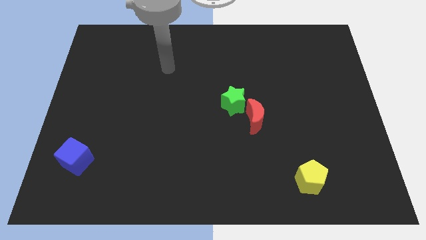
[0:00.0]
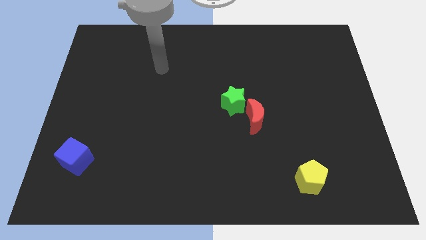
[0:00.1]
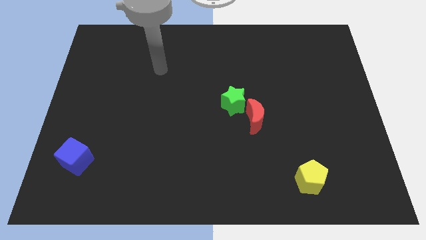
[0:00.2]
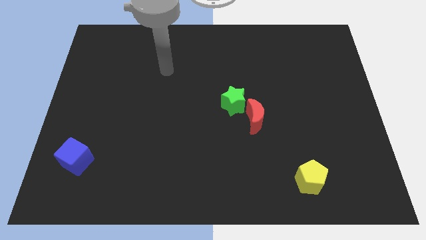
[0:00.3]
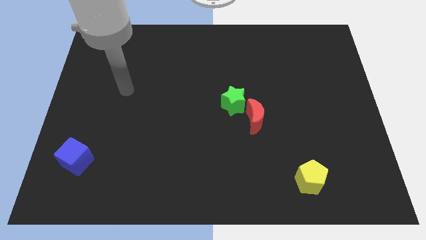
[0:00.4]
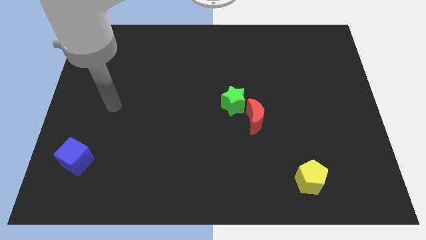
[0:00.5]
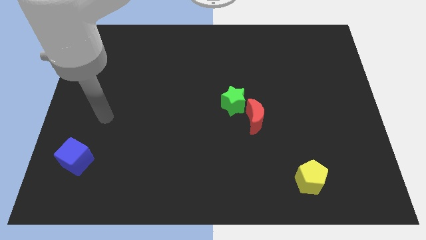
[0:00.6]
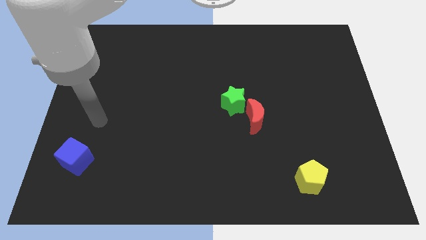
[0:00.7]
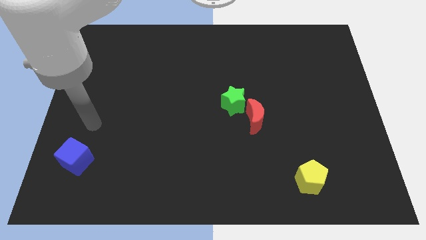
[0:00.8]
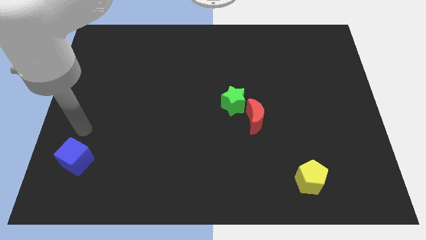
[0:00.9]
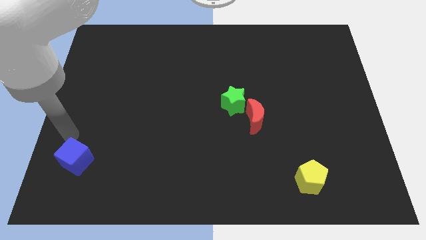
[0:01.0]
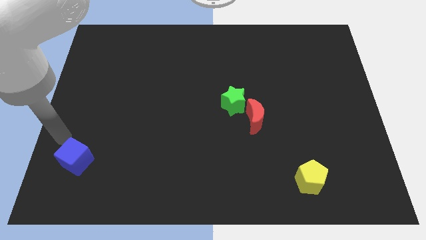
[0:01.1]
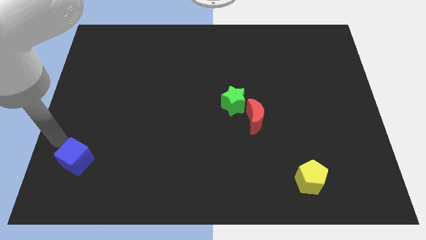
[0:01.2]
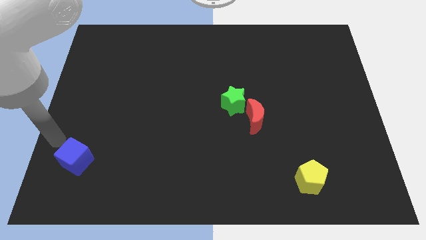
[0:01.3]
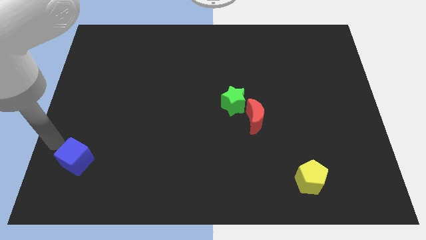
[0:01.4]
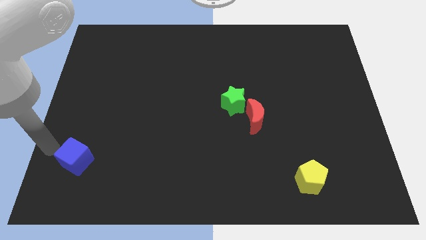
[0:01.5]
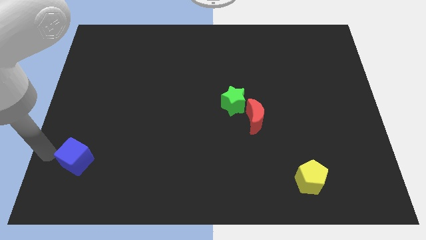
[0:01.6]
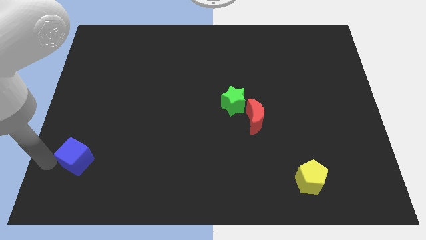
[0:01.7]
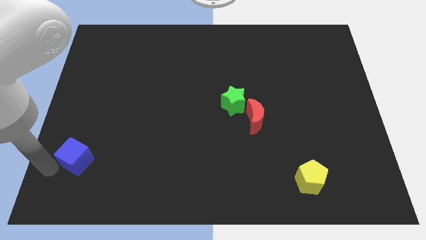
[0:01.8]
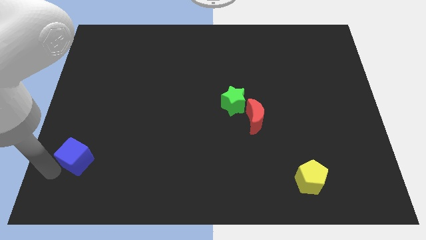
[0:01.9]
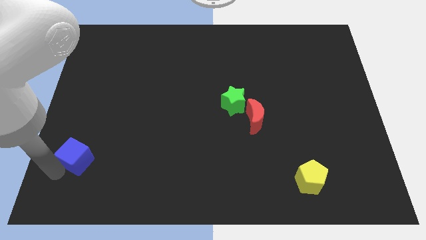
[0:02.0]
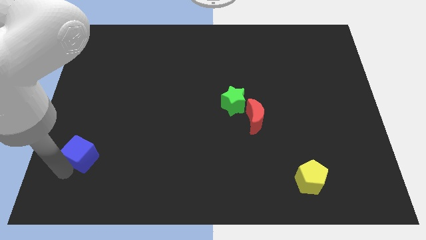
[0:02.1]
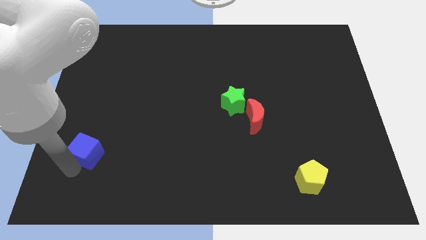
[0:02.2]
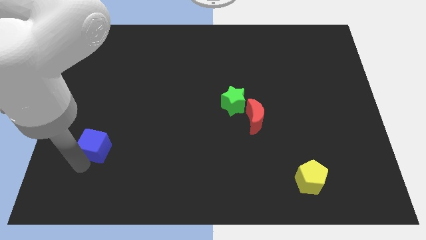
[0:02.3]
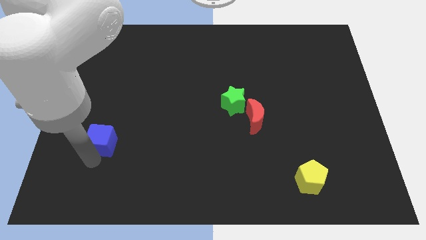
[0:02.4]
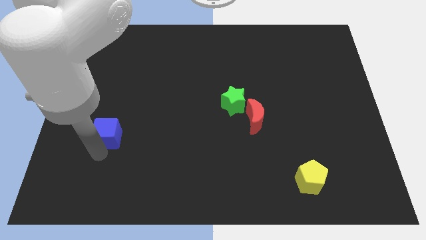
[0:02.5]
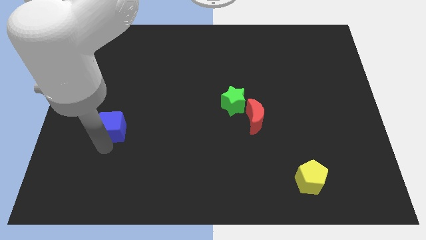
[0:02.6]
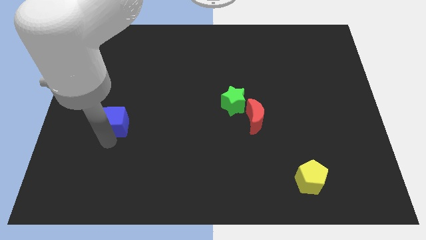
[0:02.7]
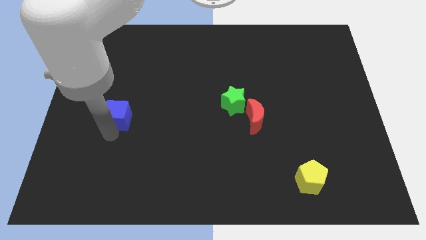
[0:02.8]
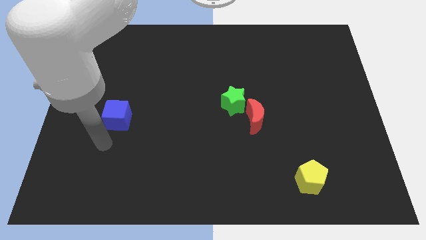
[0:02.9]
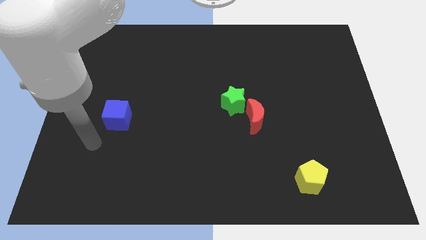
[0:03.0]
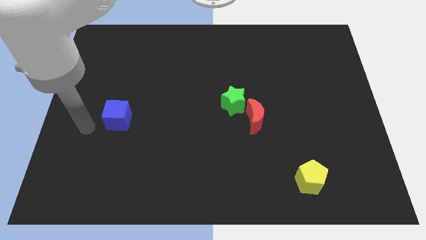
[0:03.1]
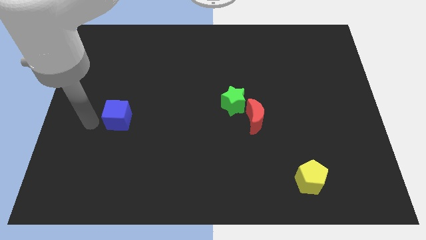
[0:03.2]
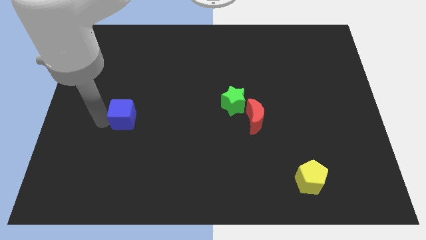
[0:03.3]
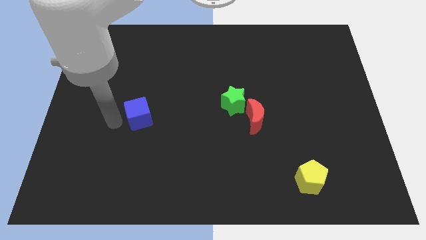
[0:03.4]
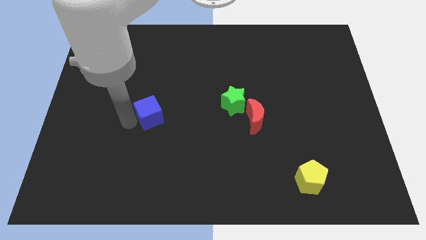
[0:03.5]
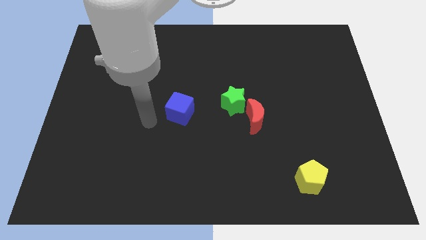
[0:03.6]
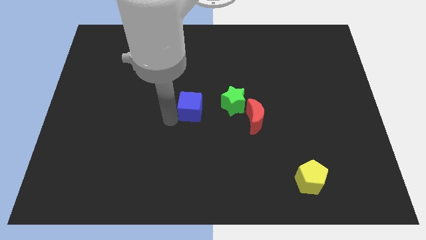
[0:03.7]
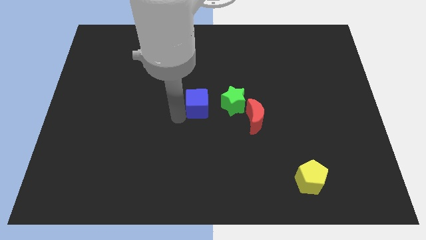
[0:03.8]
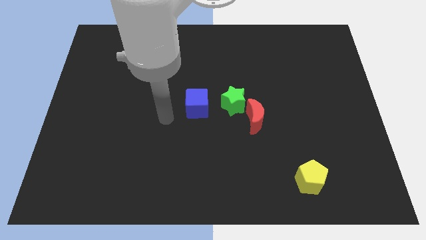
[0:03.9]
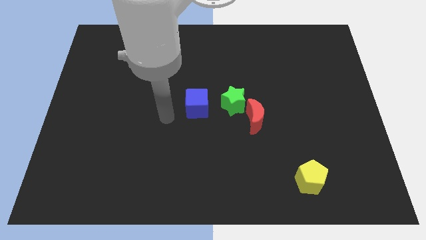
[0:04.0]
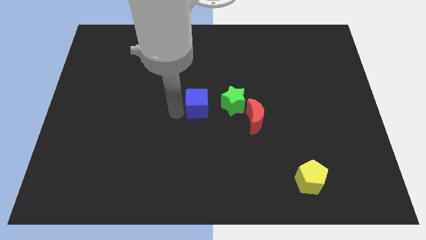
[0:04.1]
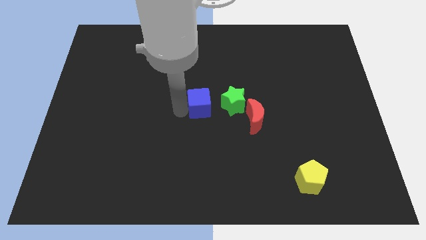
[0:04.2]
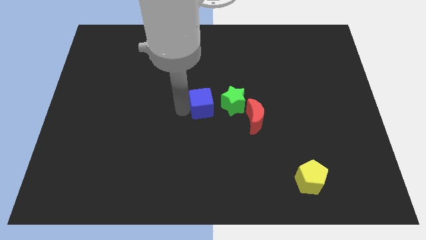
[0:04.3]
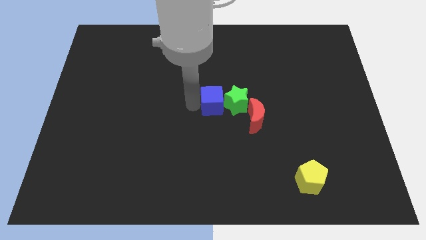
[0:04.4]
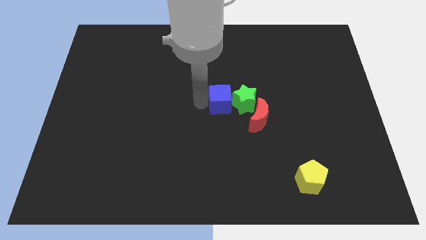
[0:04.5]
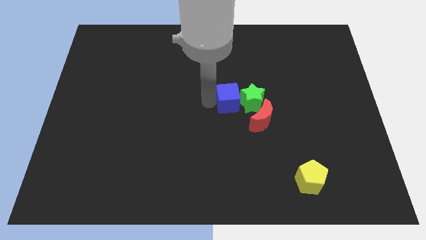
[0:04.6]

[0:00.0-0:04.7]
push the cube towards the star

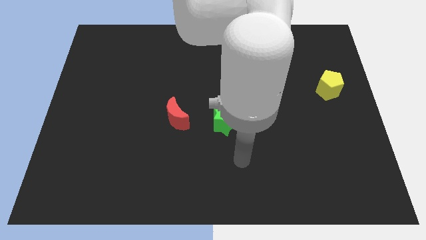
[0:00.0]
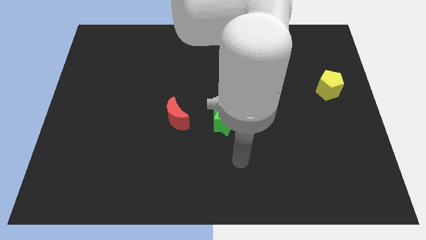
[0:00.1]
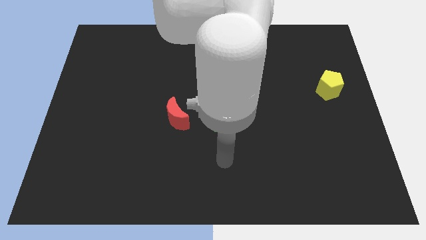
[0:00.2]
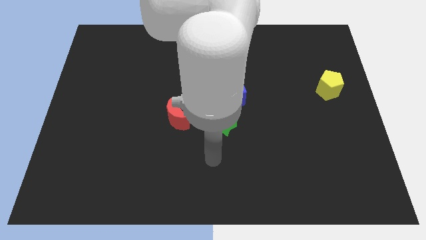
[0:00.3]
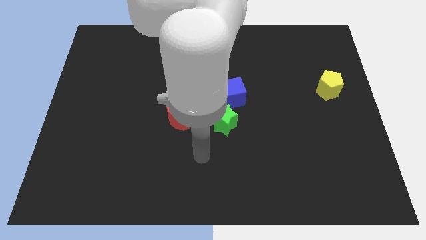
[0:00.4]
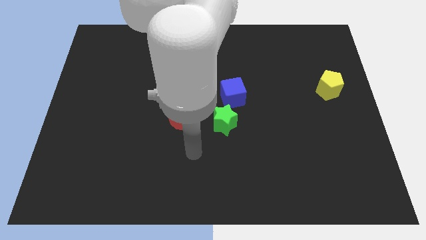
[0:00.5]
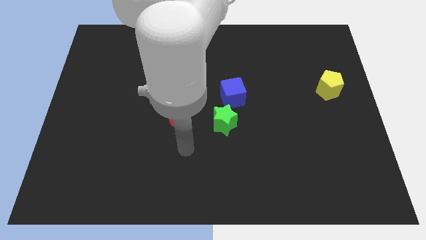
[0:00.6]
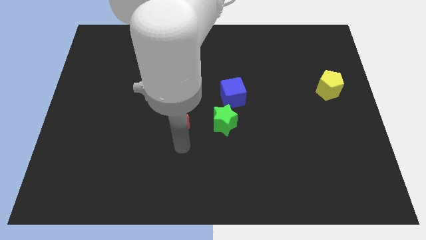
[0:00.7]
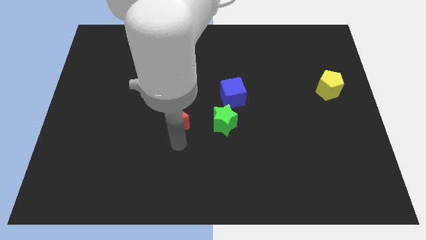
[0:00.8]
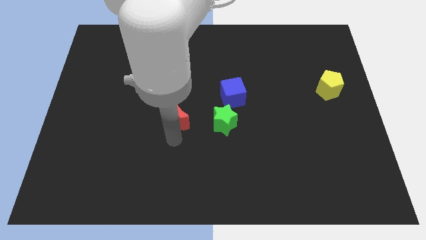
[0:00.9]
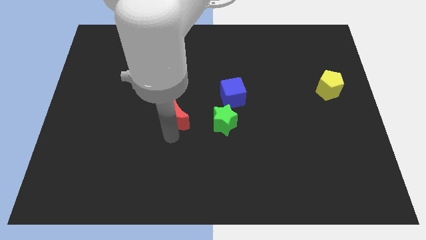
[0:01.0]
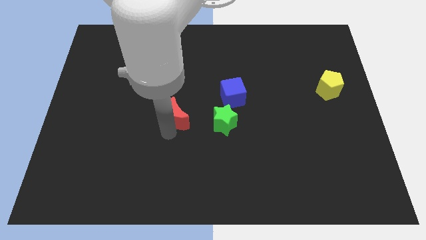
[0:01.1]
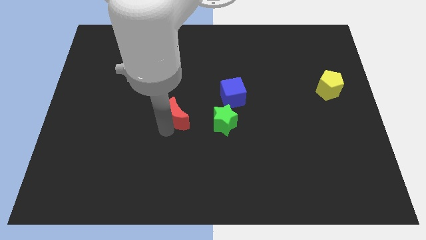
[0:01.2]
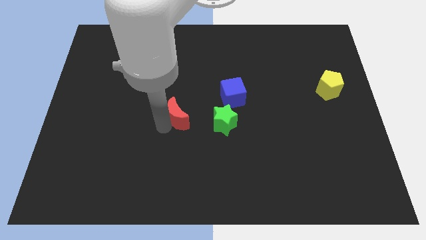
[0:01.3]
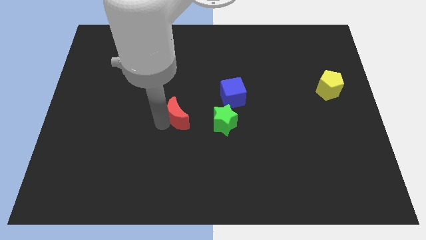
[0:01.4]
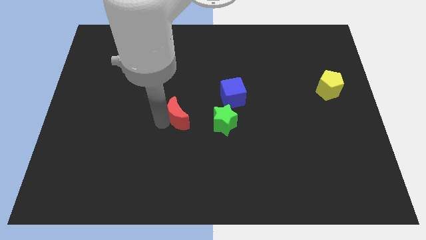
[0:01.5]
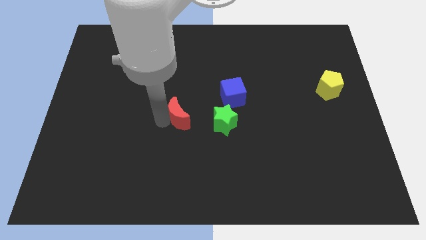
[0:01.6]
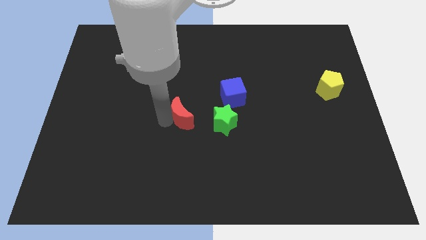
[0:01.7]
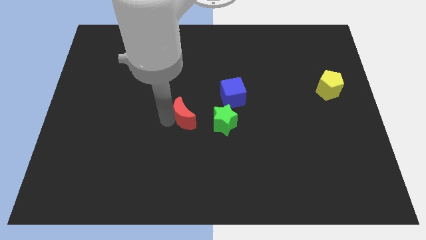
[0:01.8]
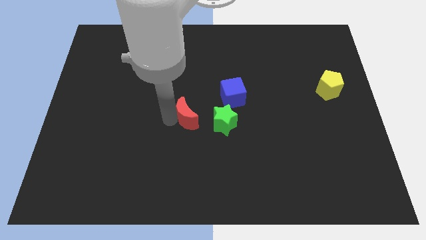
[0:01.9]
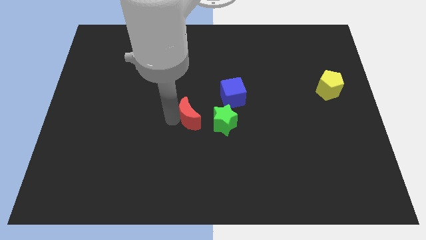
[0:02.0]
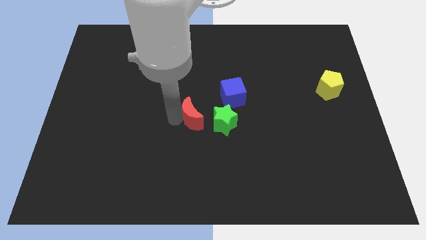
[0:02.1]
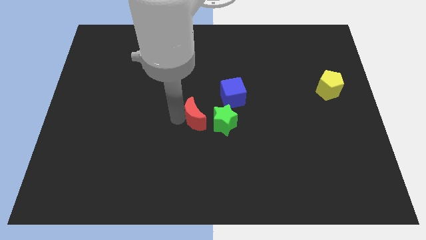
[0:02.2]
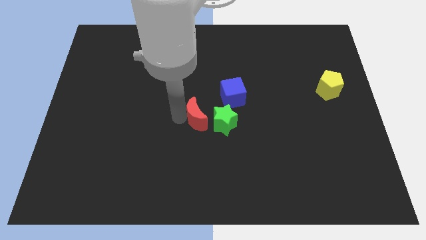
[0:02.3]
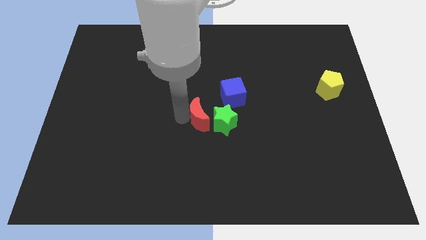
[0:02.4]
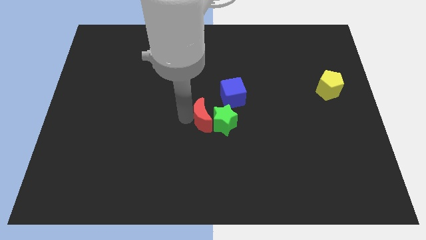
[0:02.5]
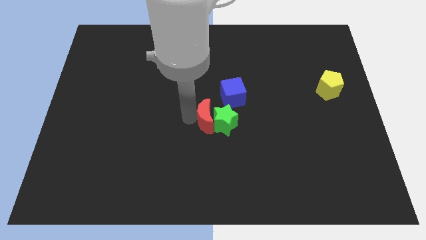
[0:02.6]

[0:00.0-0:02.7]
put the red moon close to the star

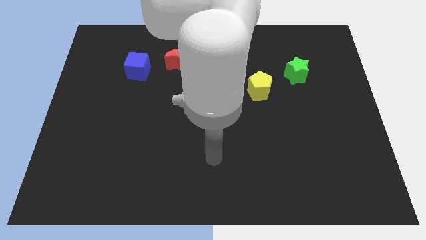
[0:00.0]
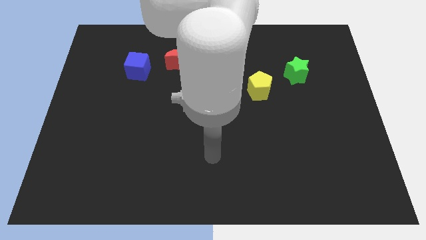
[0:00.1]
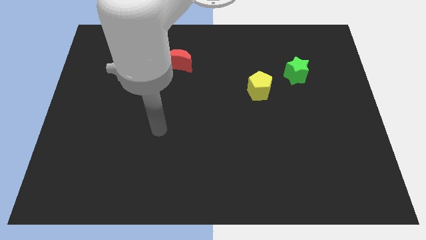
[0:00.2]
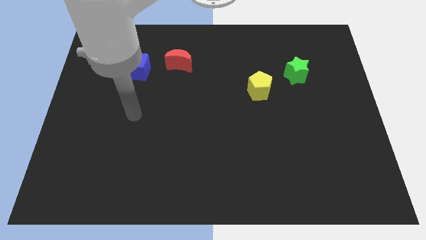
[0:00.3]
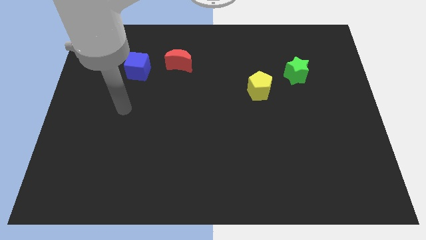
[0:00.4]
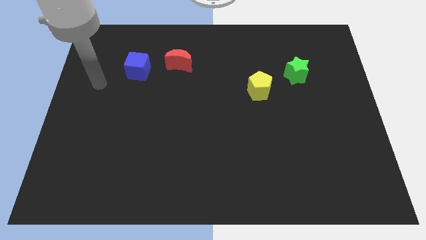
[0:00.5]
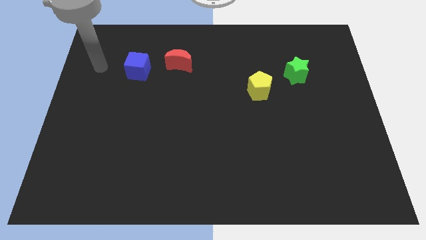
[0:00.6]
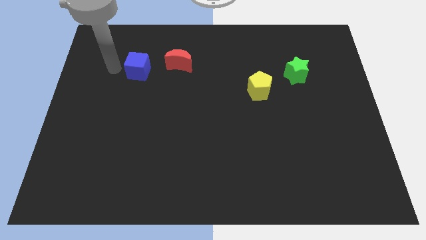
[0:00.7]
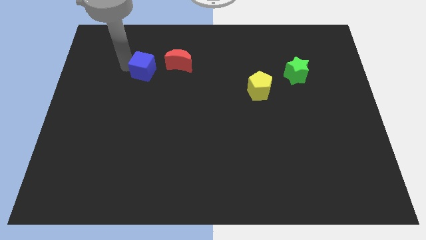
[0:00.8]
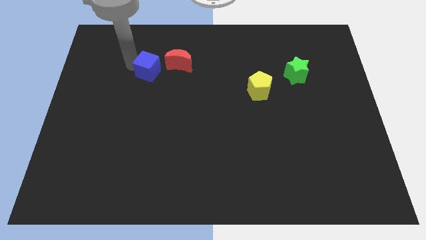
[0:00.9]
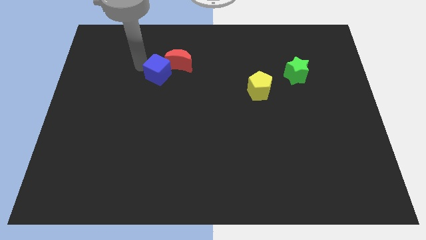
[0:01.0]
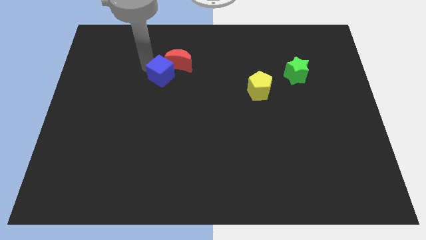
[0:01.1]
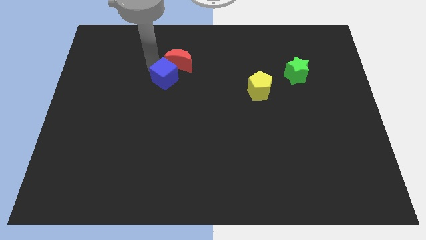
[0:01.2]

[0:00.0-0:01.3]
move the cube close to the moon
